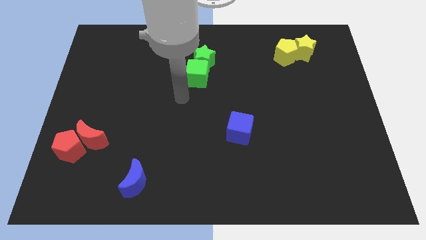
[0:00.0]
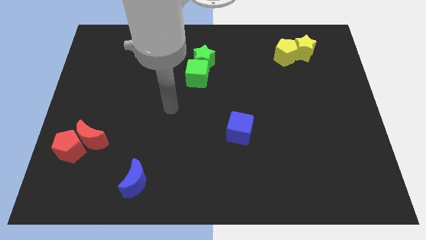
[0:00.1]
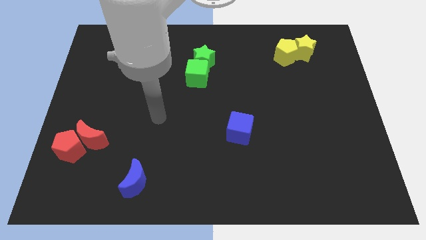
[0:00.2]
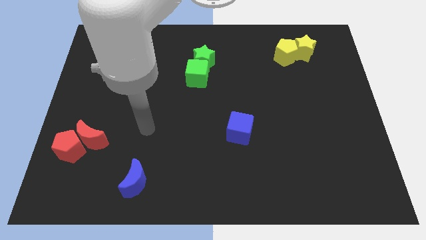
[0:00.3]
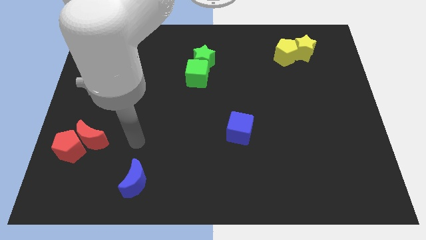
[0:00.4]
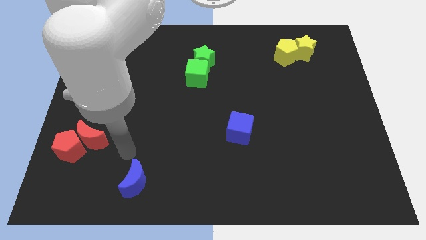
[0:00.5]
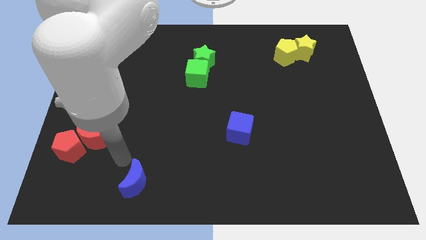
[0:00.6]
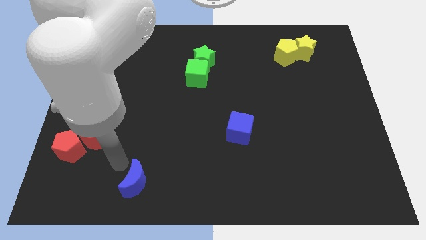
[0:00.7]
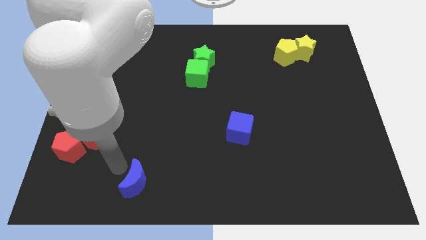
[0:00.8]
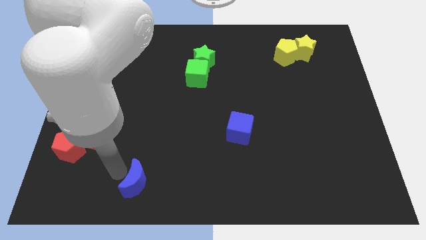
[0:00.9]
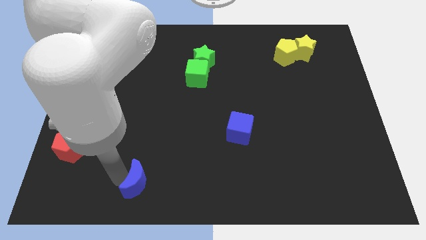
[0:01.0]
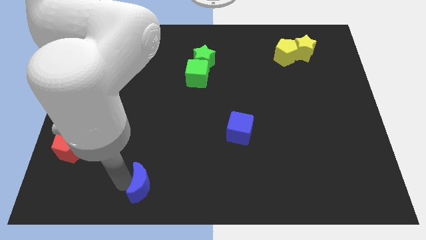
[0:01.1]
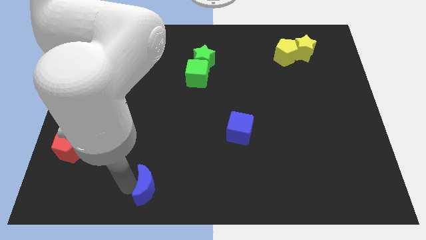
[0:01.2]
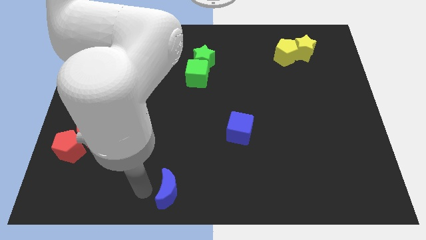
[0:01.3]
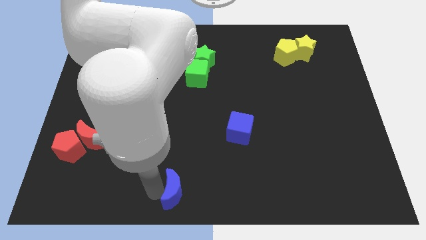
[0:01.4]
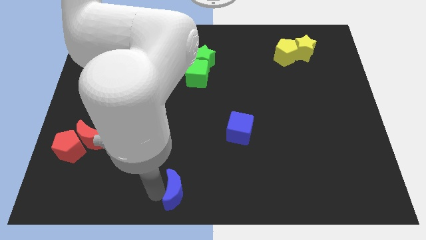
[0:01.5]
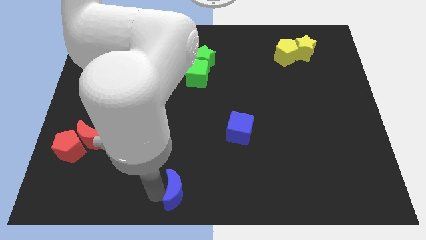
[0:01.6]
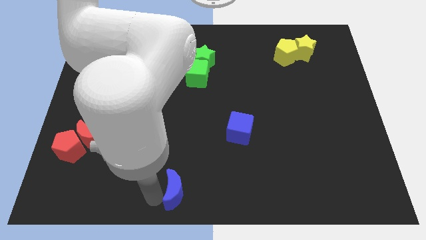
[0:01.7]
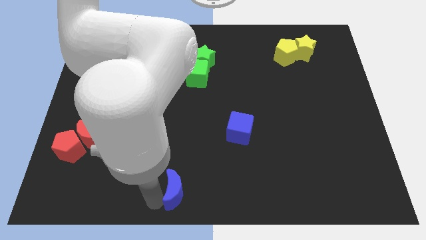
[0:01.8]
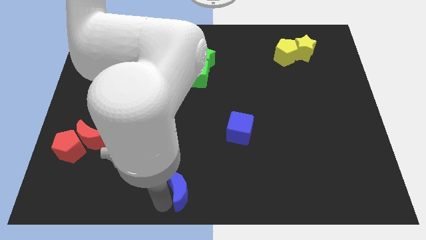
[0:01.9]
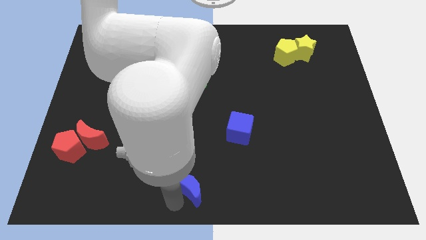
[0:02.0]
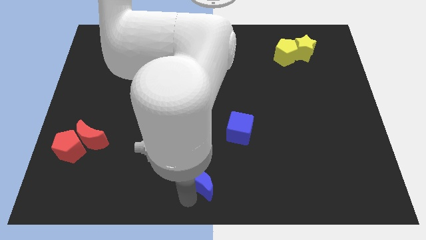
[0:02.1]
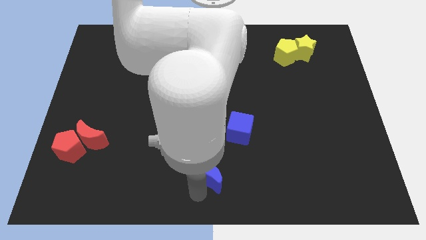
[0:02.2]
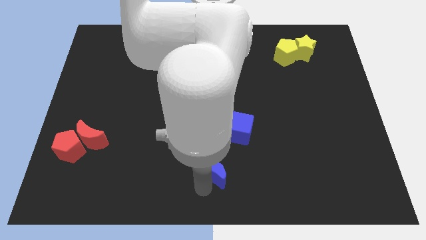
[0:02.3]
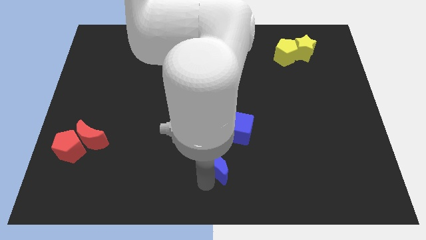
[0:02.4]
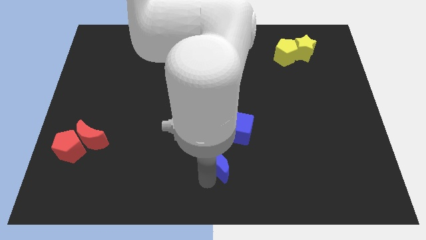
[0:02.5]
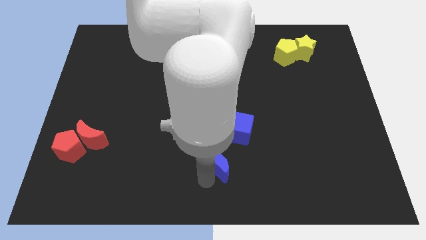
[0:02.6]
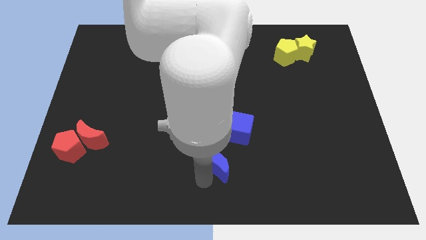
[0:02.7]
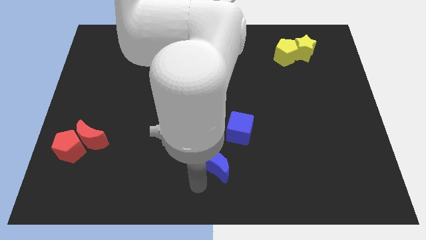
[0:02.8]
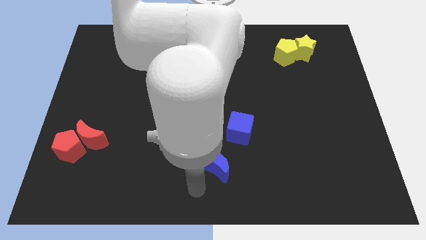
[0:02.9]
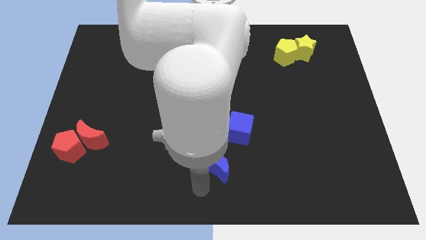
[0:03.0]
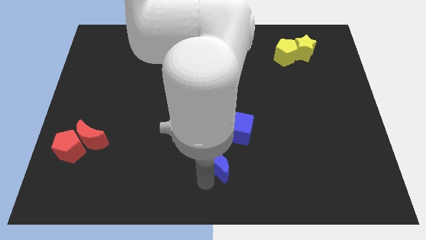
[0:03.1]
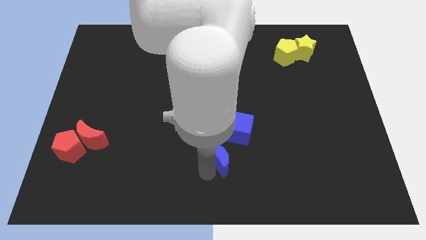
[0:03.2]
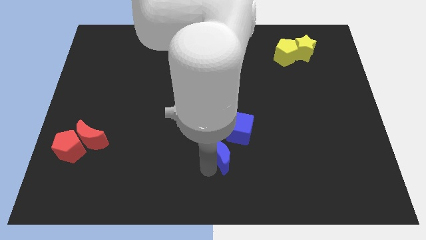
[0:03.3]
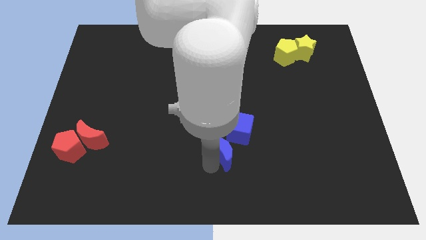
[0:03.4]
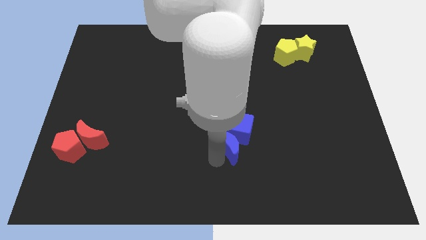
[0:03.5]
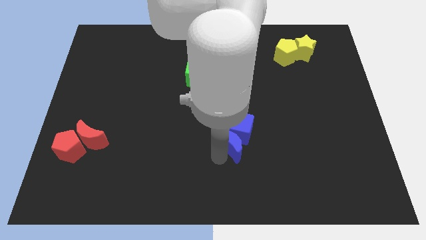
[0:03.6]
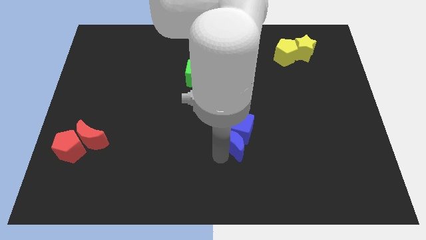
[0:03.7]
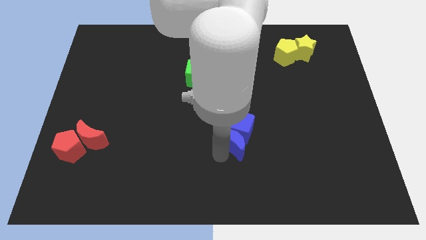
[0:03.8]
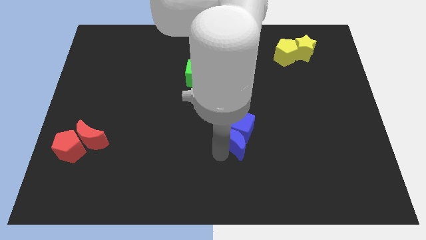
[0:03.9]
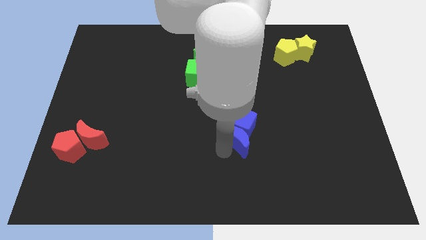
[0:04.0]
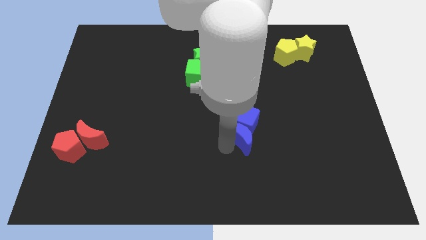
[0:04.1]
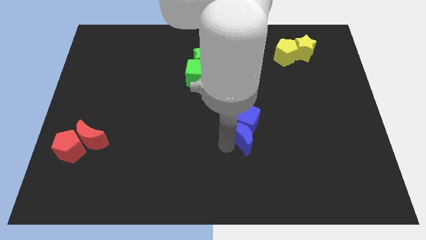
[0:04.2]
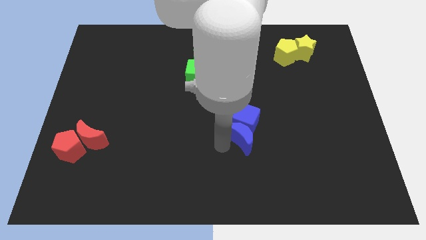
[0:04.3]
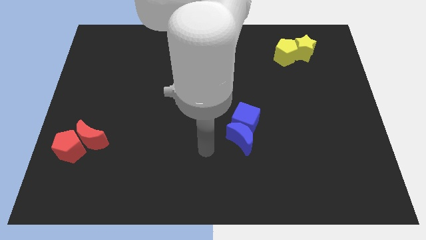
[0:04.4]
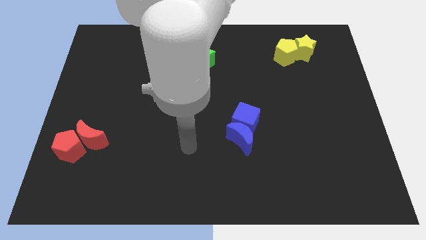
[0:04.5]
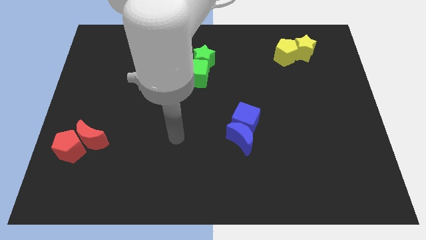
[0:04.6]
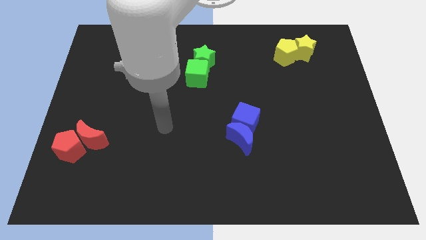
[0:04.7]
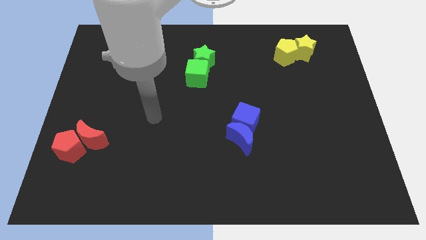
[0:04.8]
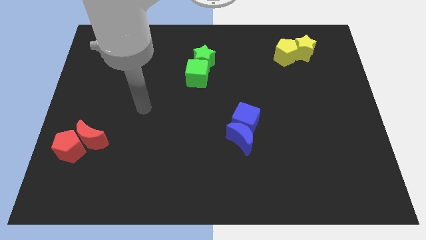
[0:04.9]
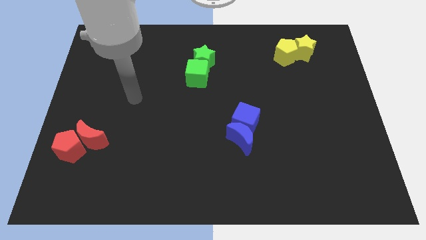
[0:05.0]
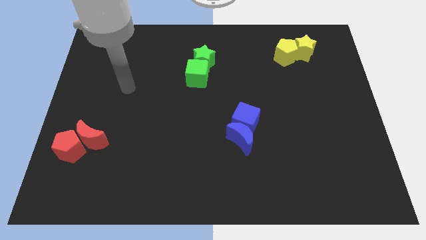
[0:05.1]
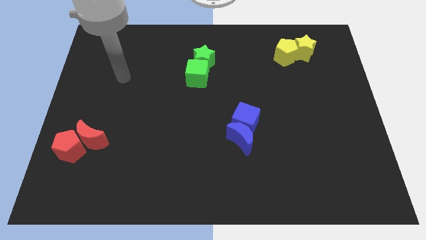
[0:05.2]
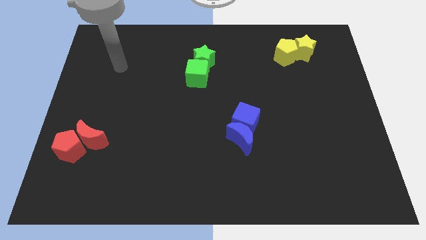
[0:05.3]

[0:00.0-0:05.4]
push the blue moon into the blue cube

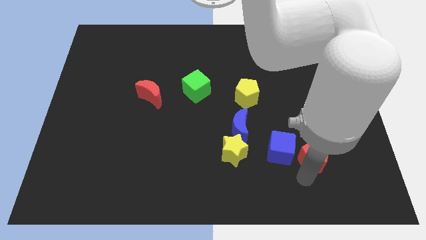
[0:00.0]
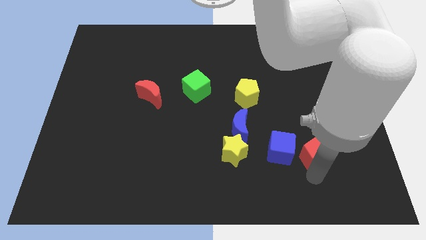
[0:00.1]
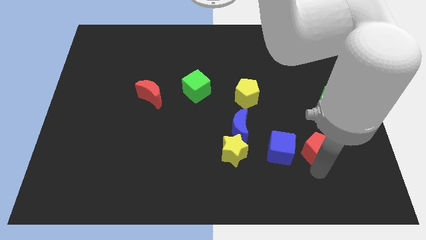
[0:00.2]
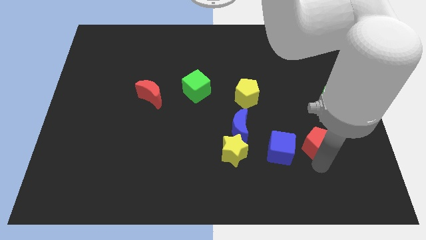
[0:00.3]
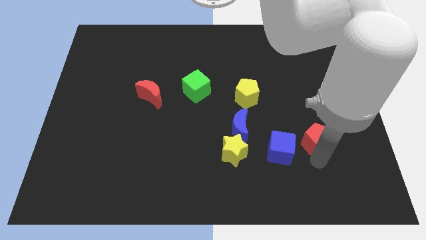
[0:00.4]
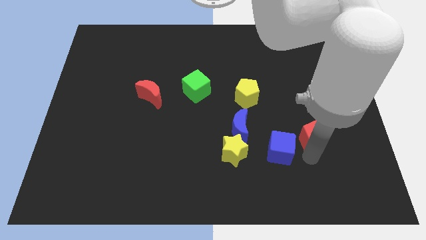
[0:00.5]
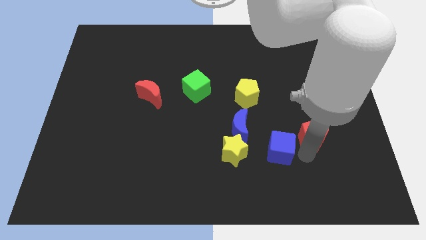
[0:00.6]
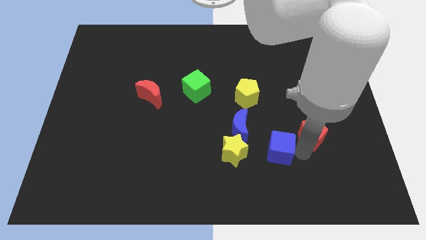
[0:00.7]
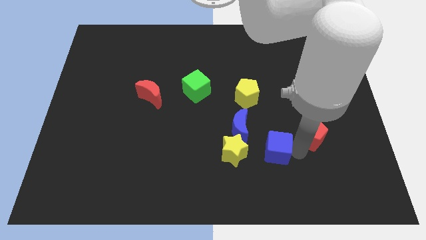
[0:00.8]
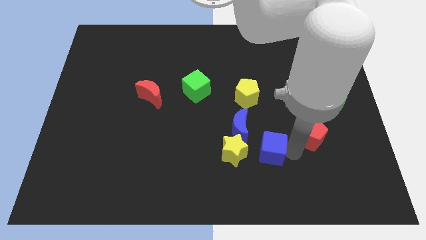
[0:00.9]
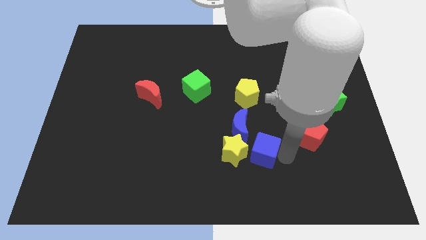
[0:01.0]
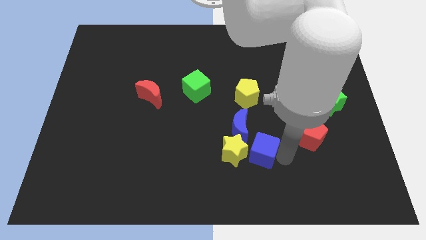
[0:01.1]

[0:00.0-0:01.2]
move the blue cube into the yellow star from the right

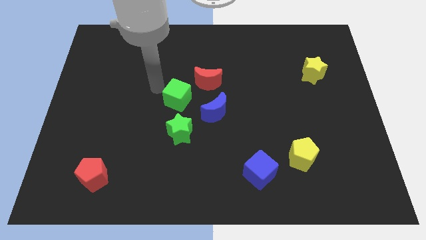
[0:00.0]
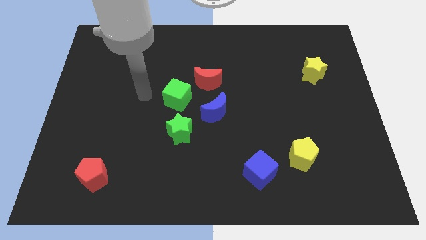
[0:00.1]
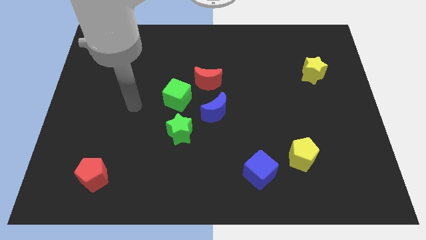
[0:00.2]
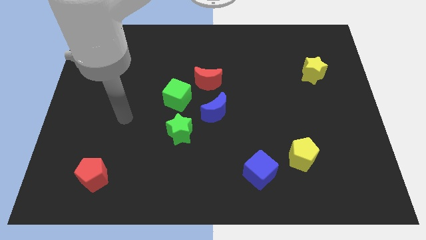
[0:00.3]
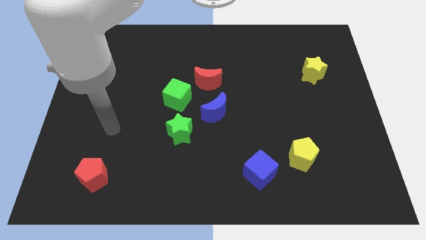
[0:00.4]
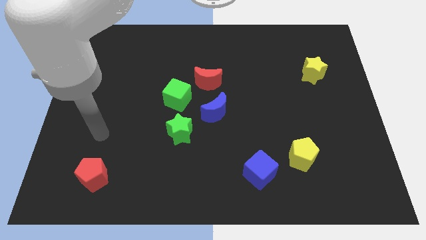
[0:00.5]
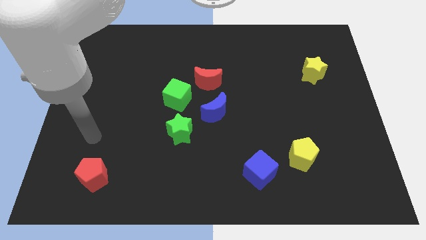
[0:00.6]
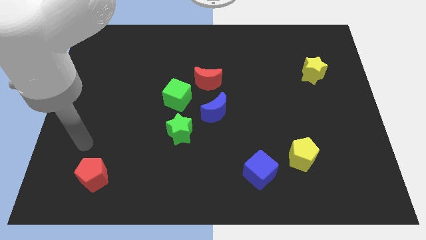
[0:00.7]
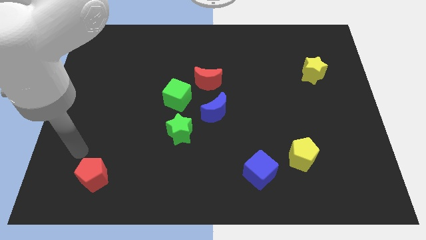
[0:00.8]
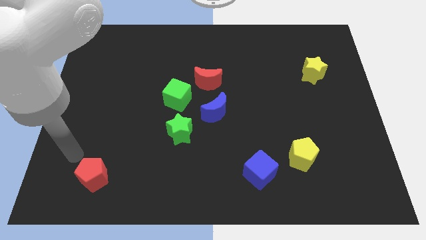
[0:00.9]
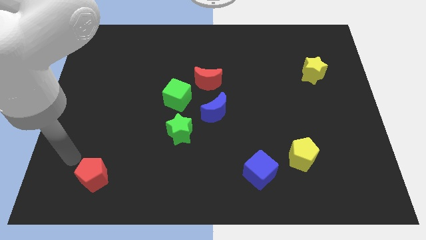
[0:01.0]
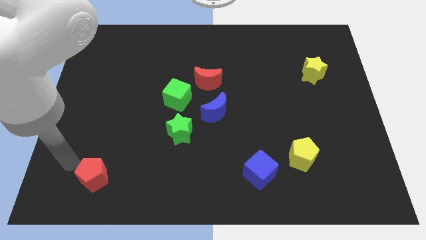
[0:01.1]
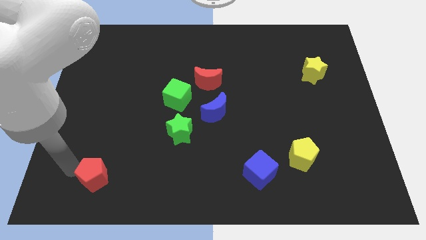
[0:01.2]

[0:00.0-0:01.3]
move your arm to the left of red crescent

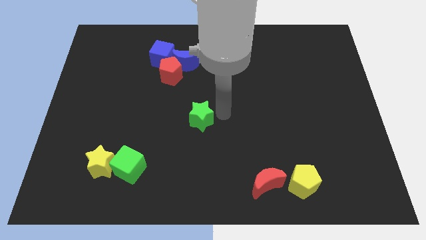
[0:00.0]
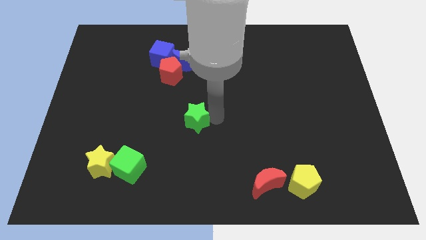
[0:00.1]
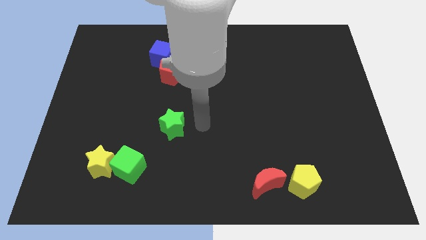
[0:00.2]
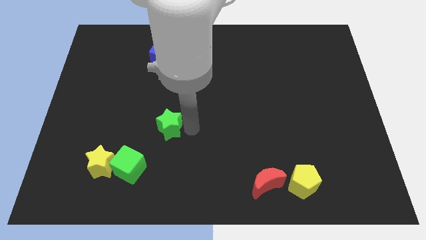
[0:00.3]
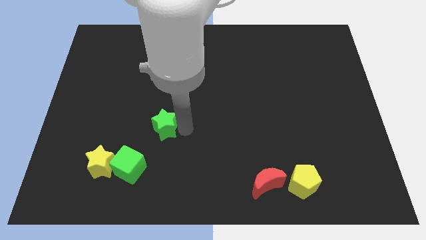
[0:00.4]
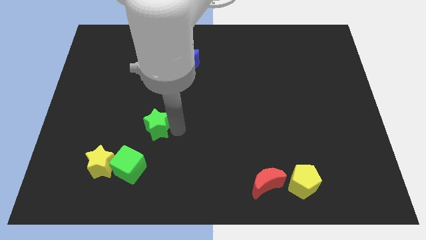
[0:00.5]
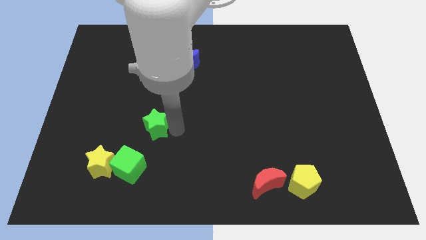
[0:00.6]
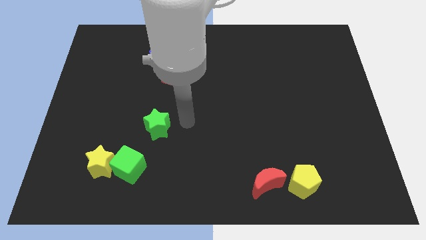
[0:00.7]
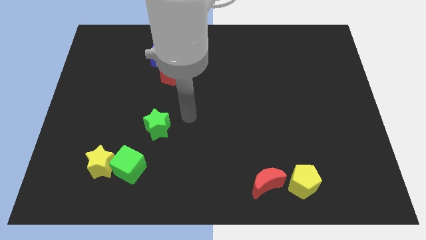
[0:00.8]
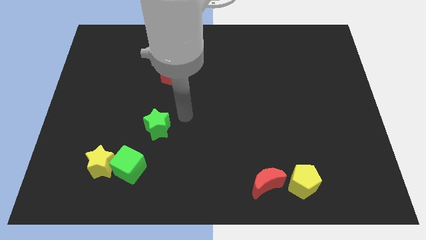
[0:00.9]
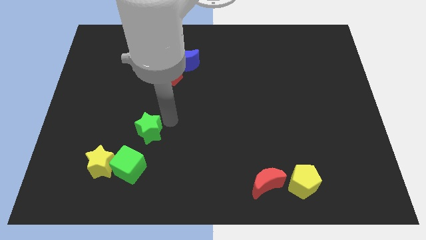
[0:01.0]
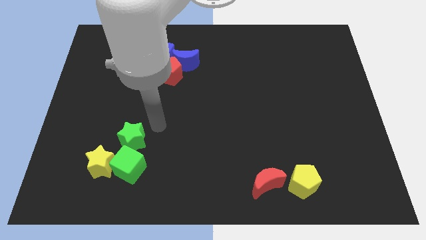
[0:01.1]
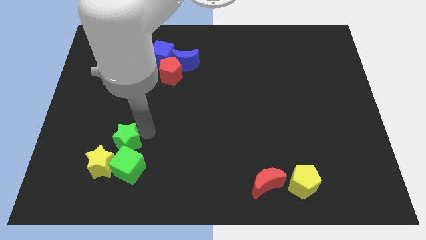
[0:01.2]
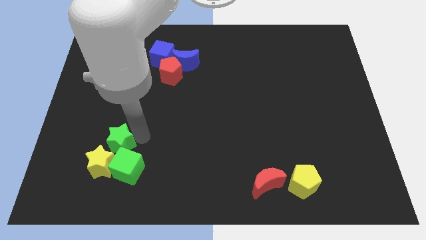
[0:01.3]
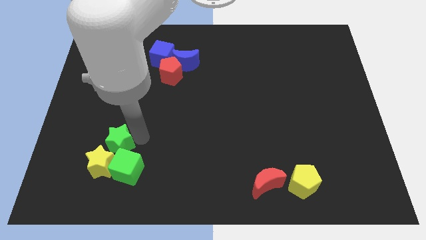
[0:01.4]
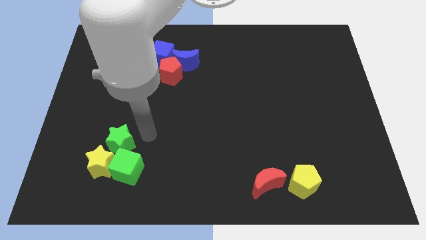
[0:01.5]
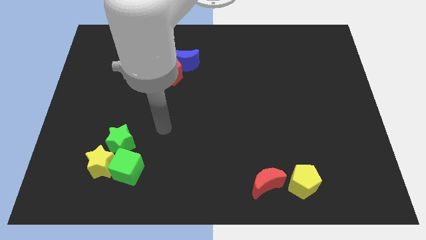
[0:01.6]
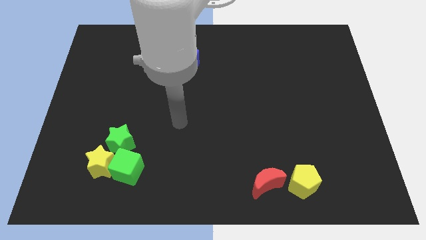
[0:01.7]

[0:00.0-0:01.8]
push the green star into the yellow star and green cube
